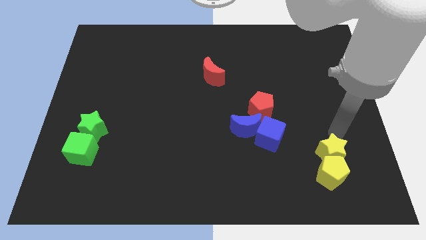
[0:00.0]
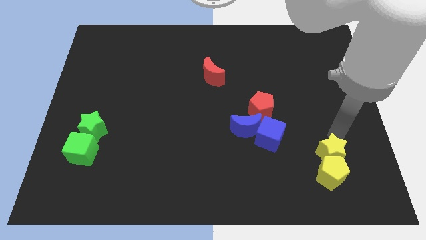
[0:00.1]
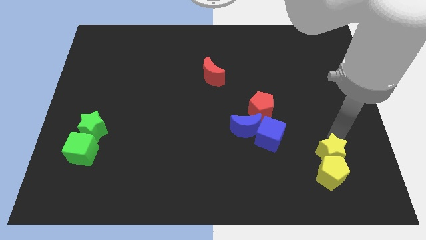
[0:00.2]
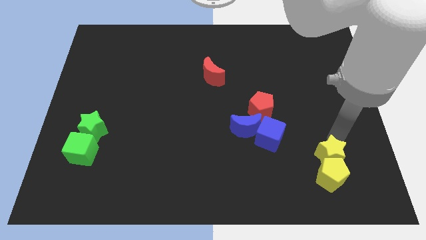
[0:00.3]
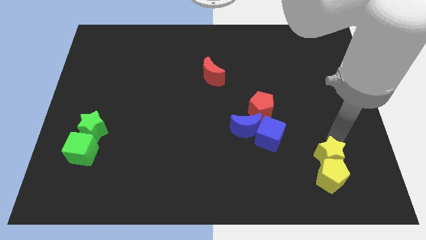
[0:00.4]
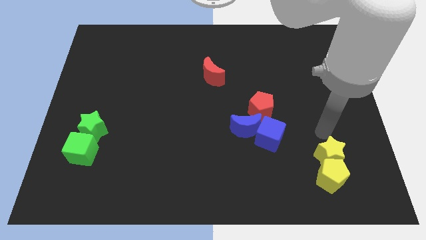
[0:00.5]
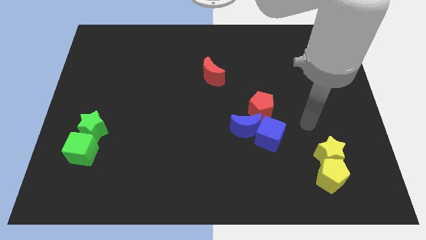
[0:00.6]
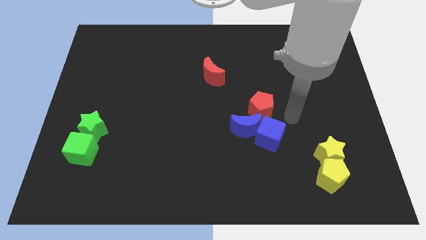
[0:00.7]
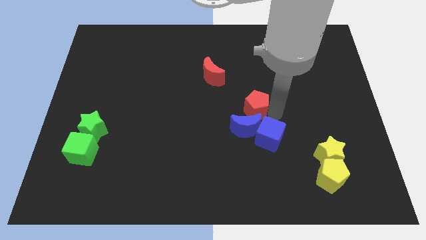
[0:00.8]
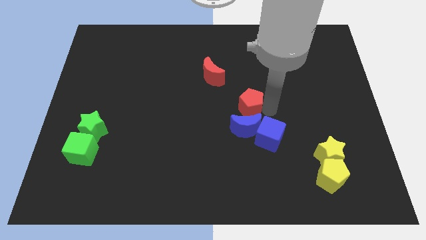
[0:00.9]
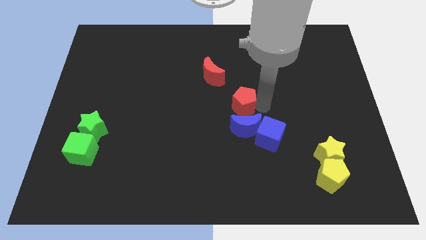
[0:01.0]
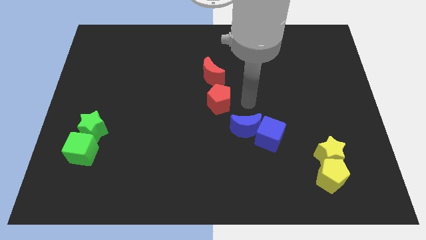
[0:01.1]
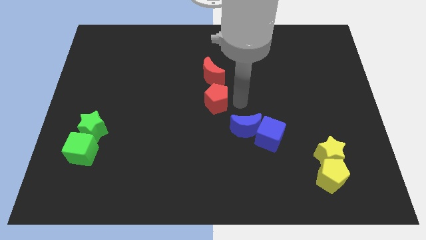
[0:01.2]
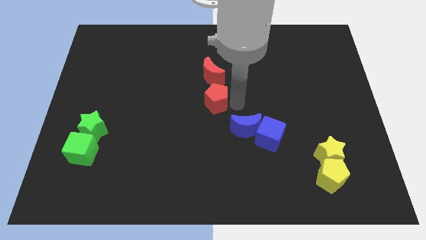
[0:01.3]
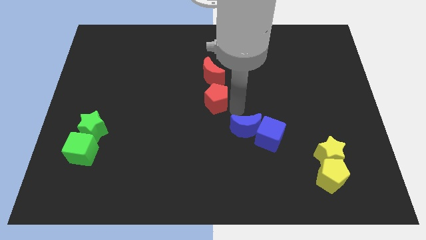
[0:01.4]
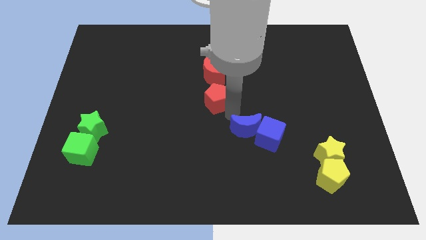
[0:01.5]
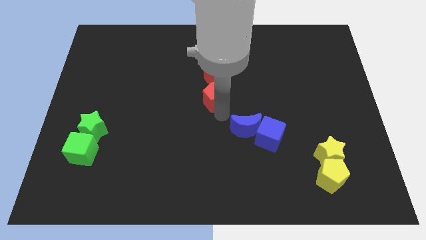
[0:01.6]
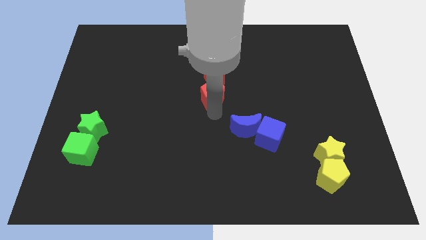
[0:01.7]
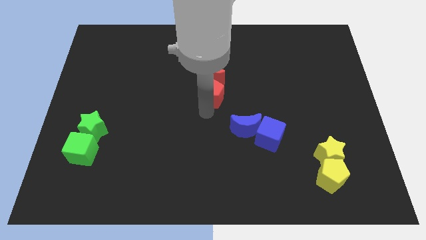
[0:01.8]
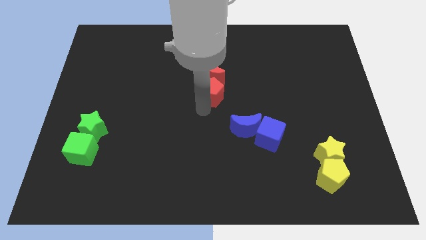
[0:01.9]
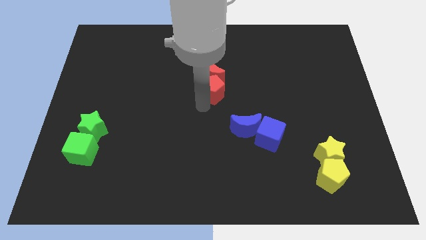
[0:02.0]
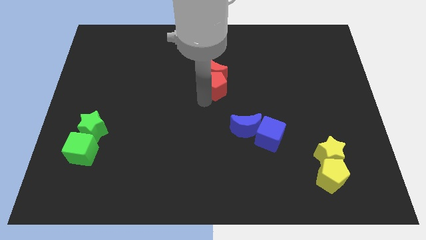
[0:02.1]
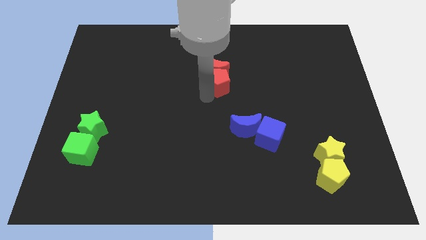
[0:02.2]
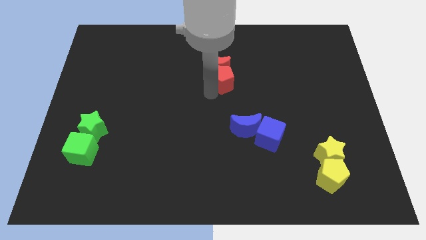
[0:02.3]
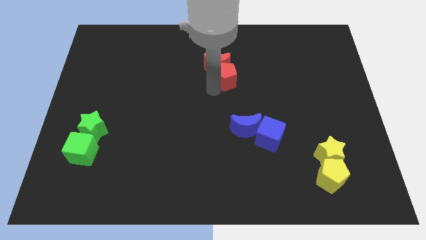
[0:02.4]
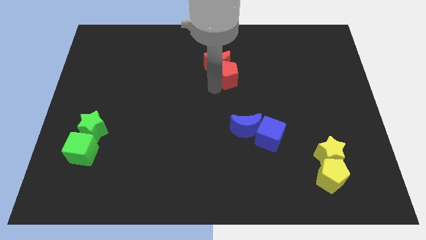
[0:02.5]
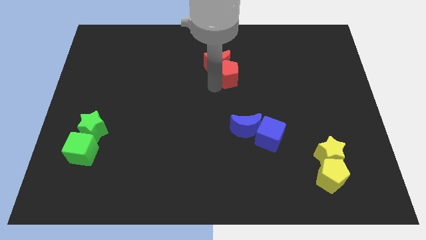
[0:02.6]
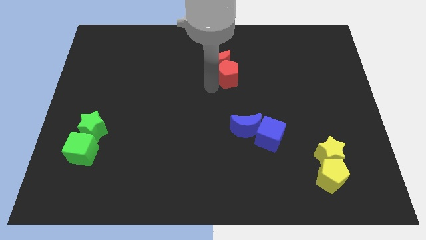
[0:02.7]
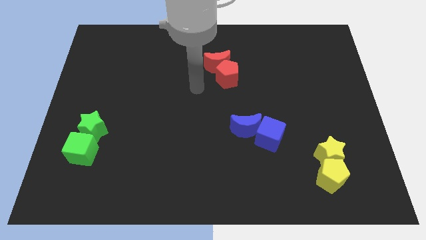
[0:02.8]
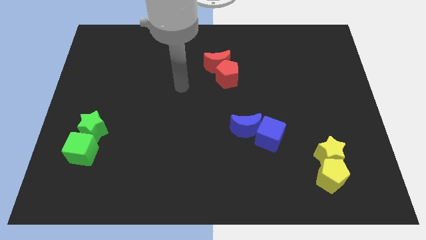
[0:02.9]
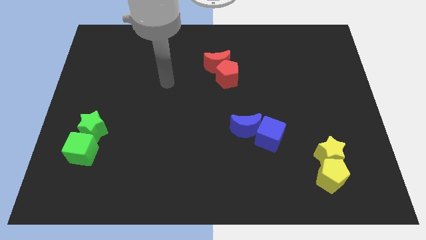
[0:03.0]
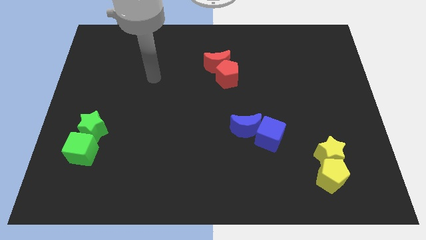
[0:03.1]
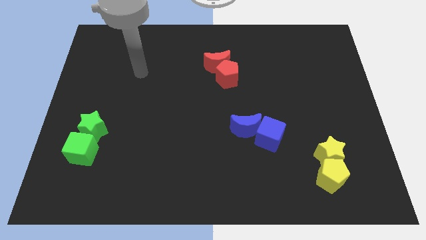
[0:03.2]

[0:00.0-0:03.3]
push the red pentagon into the red moon

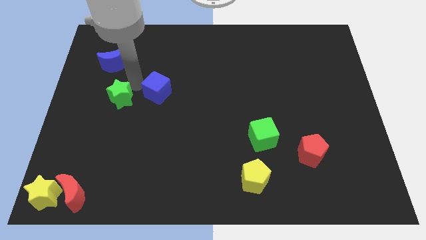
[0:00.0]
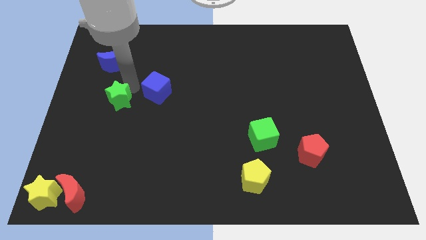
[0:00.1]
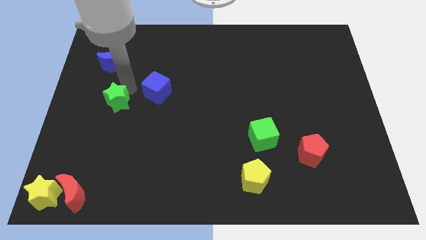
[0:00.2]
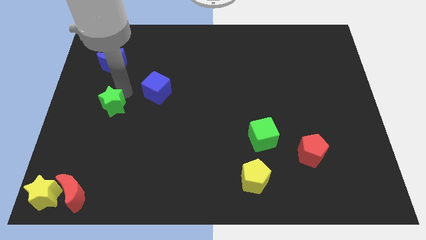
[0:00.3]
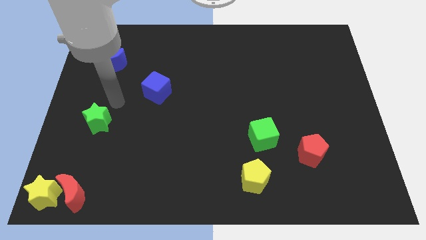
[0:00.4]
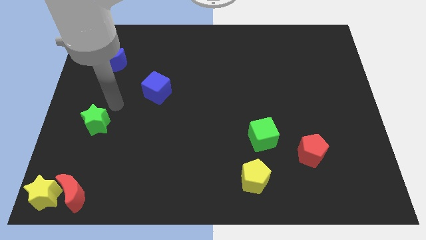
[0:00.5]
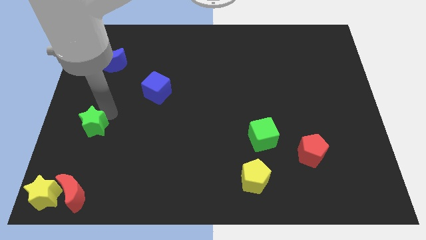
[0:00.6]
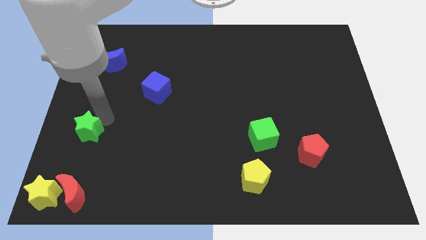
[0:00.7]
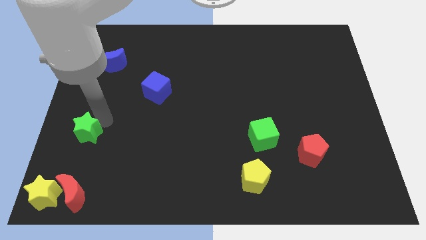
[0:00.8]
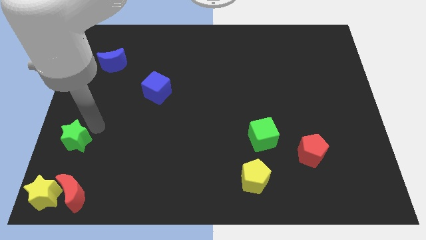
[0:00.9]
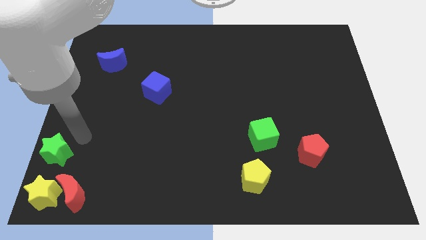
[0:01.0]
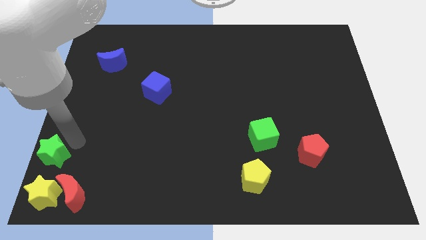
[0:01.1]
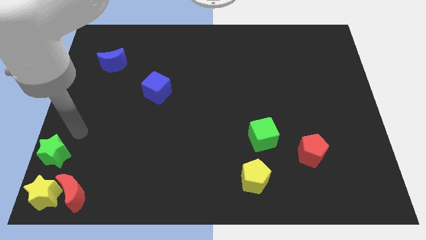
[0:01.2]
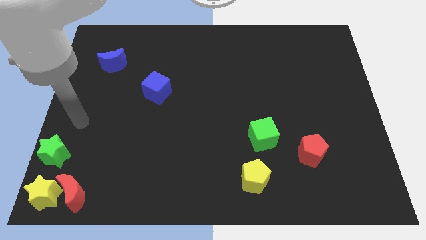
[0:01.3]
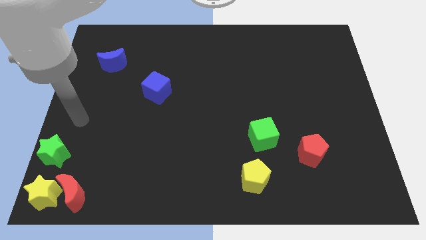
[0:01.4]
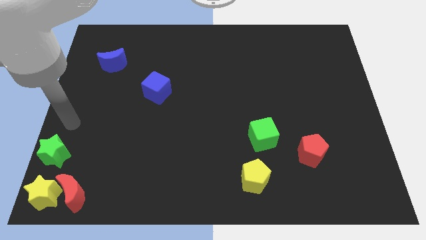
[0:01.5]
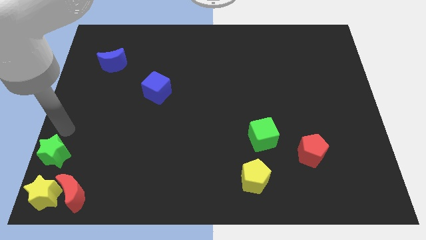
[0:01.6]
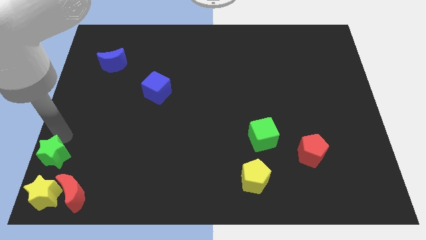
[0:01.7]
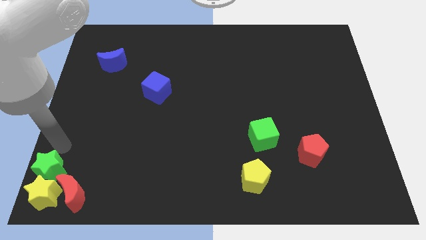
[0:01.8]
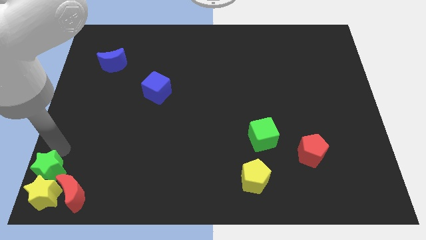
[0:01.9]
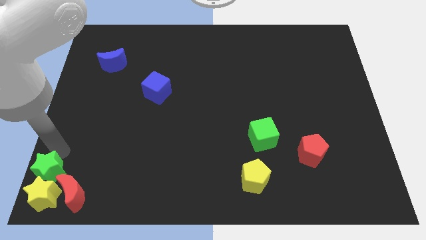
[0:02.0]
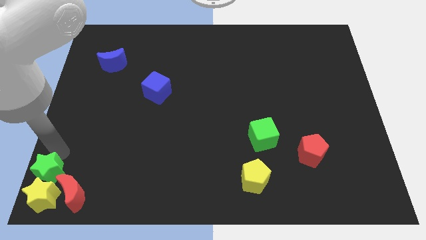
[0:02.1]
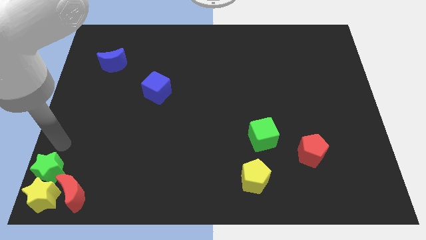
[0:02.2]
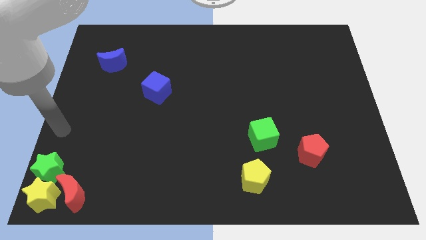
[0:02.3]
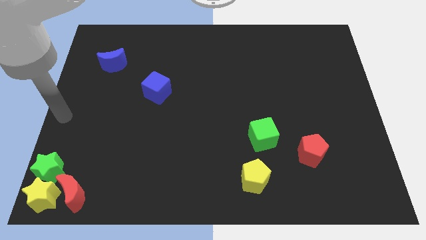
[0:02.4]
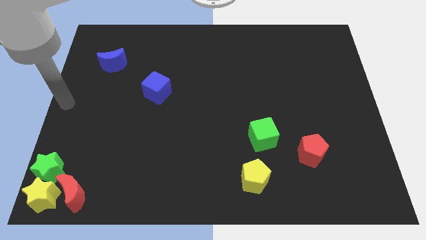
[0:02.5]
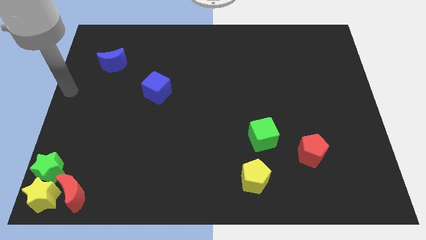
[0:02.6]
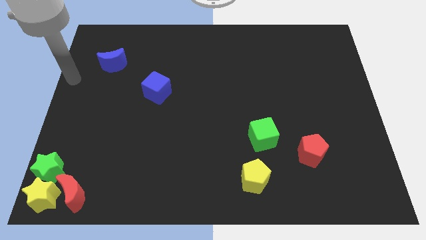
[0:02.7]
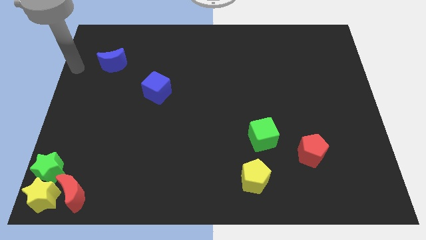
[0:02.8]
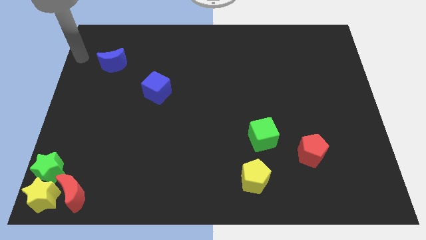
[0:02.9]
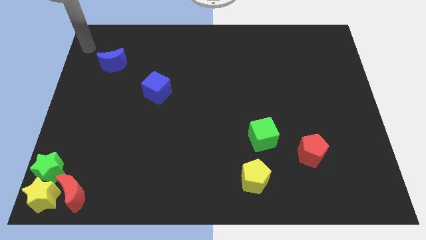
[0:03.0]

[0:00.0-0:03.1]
push the green star into the yellow star

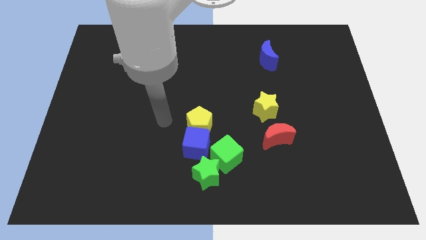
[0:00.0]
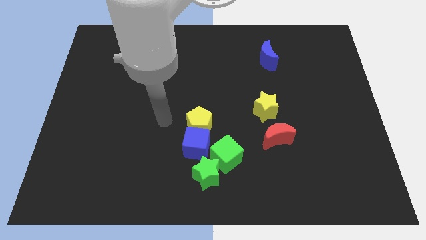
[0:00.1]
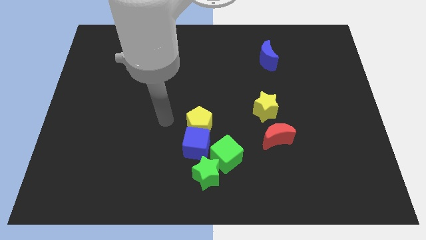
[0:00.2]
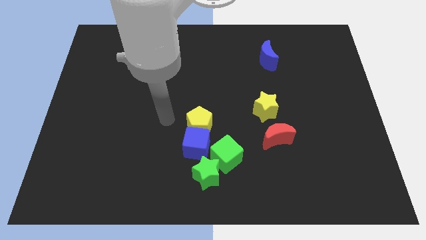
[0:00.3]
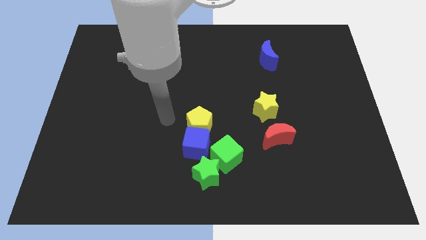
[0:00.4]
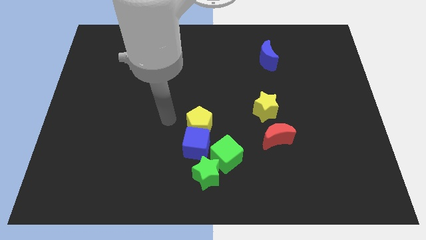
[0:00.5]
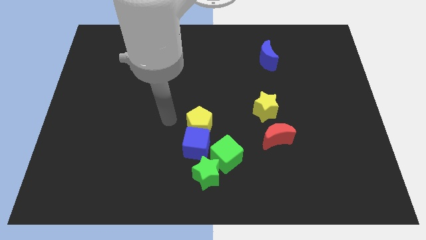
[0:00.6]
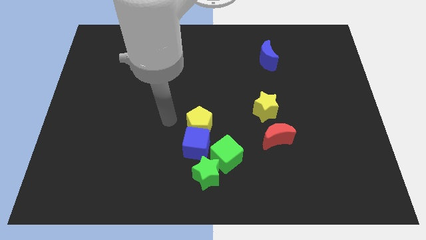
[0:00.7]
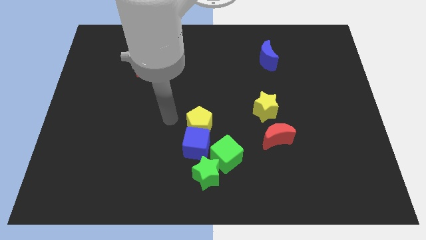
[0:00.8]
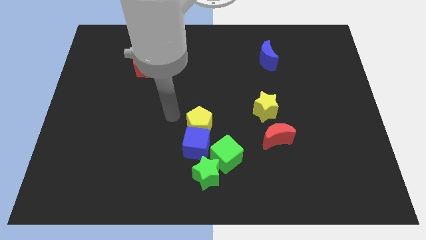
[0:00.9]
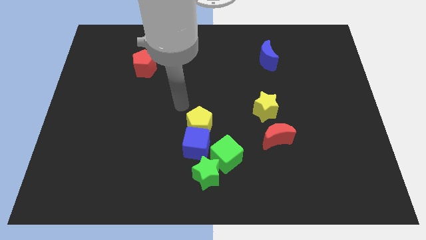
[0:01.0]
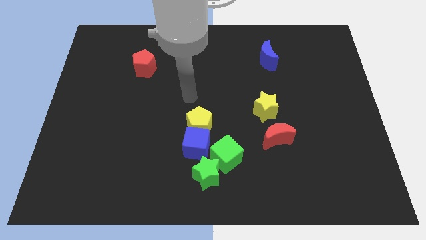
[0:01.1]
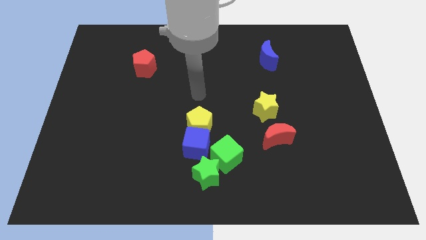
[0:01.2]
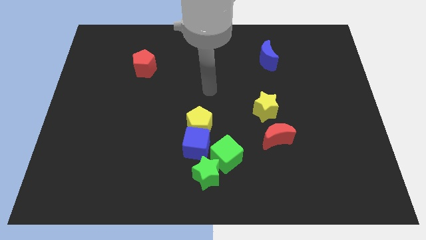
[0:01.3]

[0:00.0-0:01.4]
point your hand above the yellow pentagon

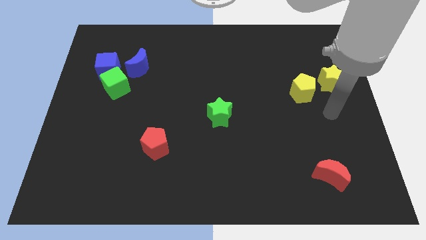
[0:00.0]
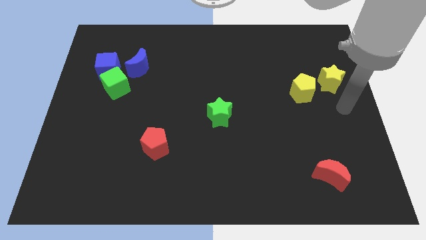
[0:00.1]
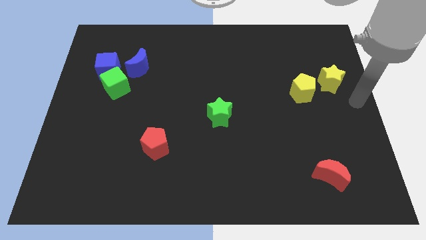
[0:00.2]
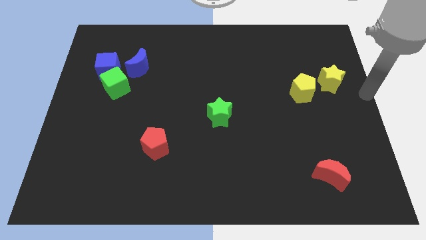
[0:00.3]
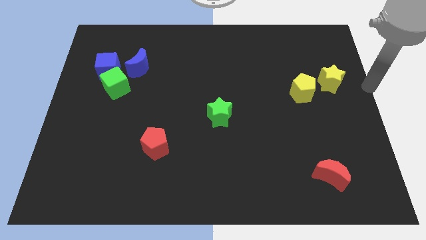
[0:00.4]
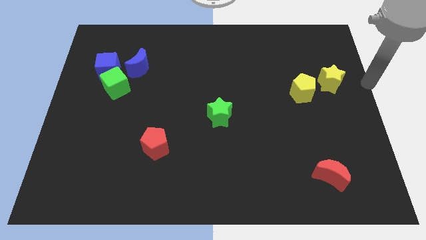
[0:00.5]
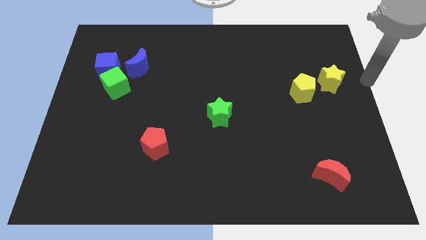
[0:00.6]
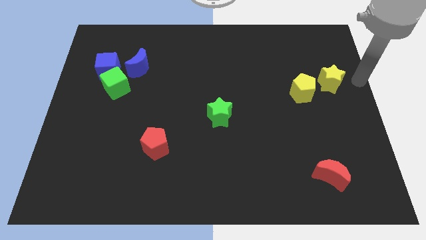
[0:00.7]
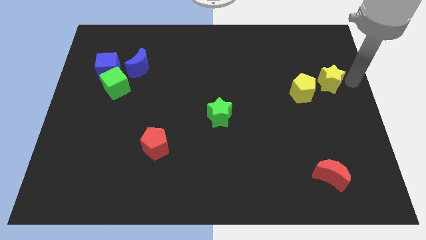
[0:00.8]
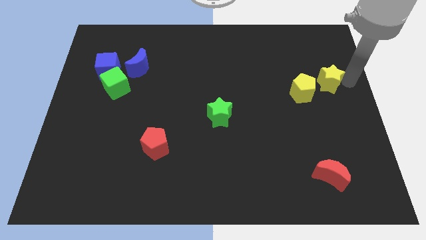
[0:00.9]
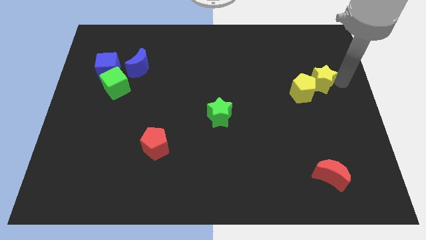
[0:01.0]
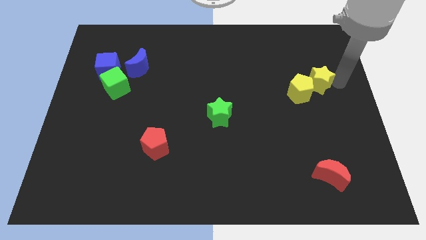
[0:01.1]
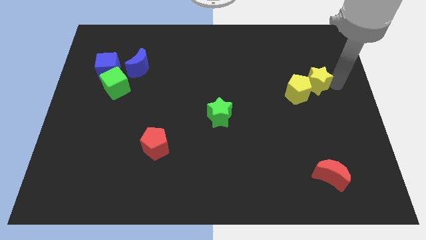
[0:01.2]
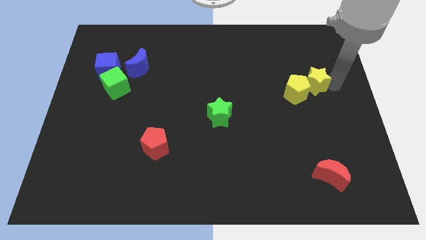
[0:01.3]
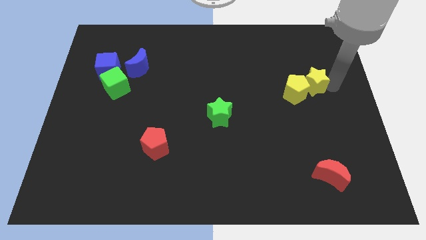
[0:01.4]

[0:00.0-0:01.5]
push the yellow star into the yellow pentagon from the right
